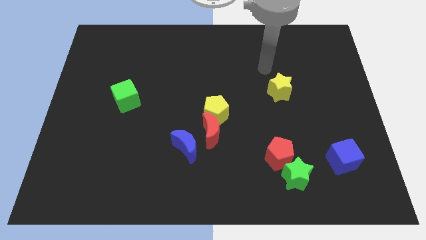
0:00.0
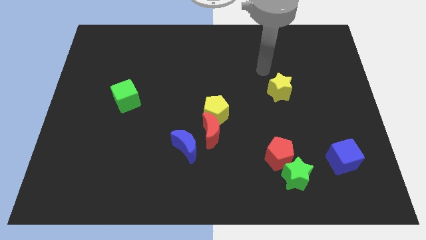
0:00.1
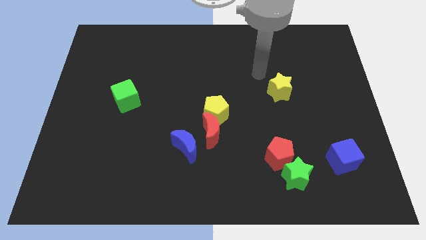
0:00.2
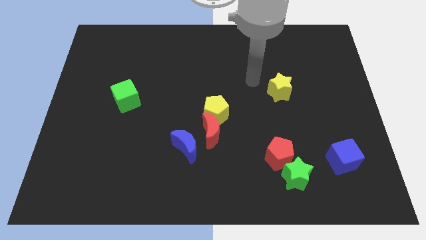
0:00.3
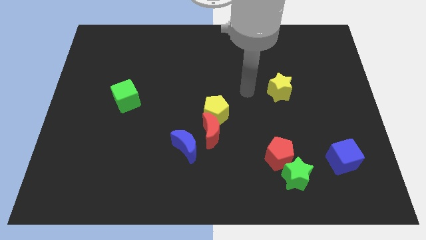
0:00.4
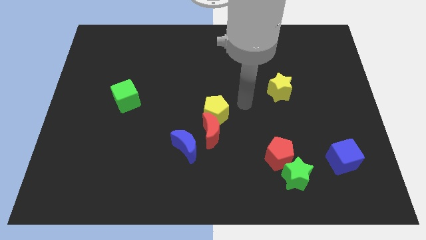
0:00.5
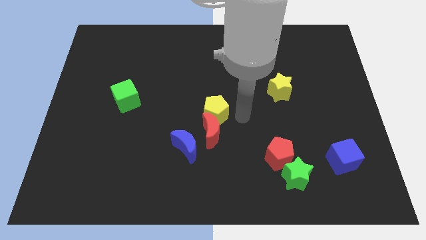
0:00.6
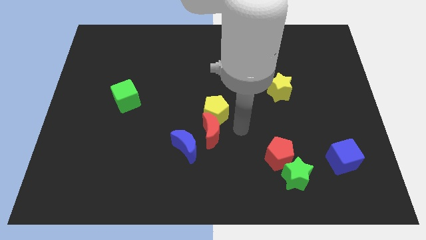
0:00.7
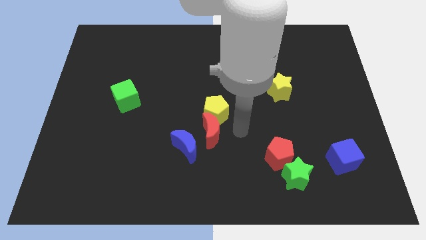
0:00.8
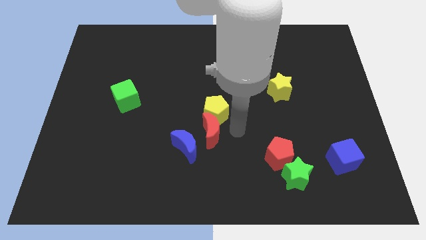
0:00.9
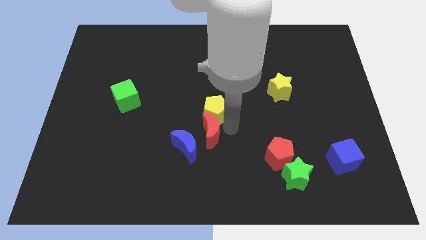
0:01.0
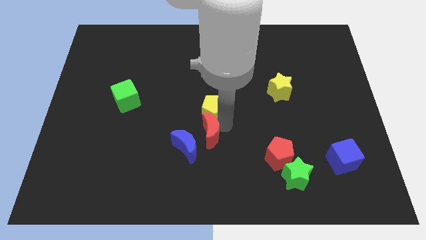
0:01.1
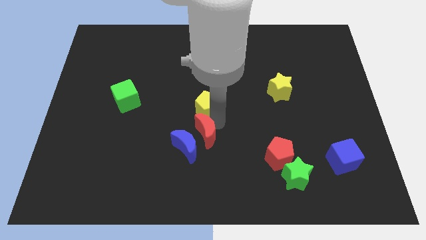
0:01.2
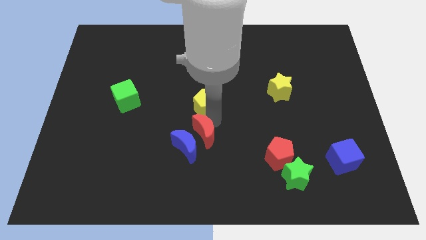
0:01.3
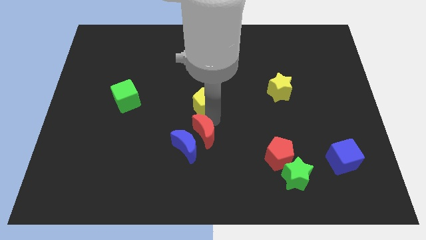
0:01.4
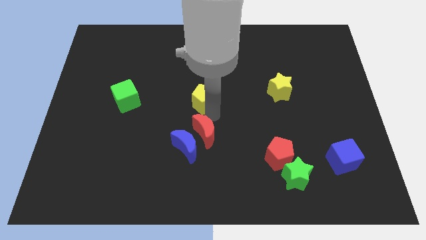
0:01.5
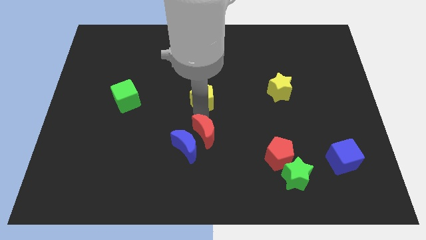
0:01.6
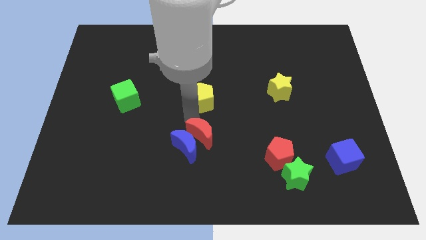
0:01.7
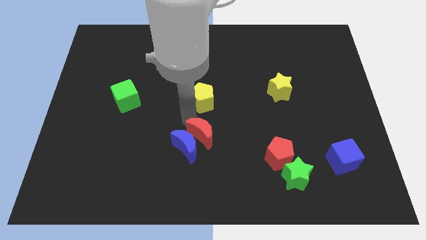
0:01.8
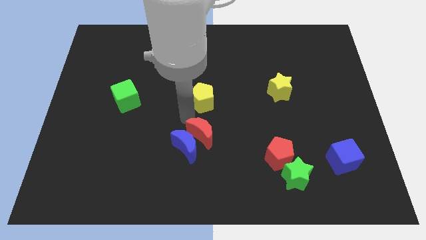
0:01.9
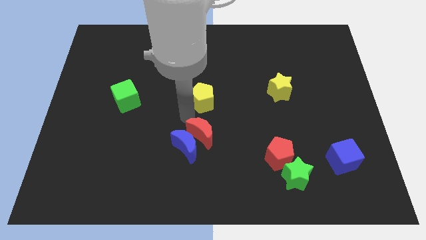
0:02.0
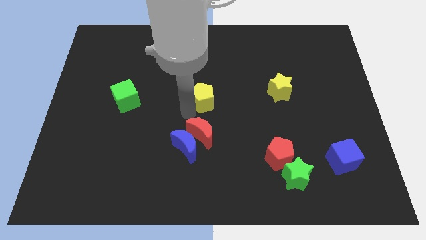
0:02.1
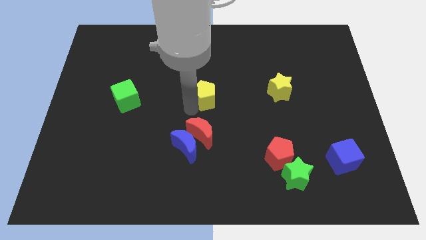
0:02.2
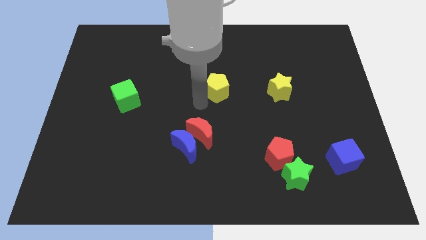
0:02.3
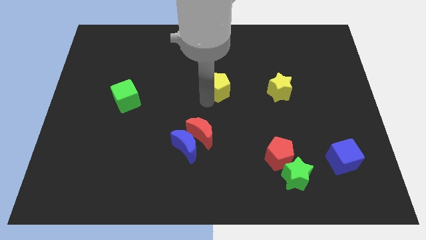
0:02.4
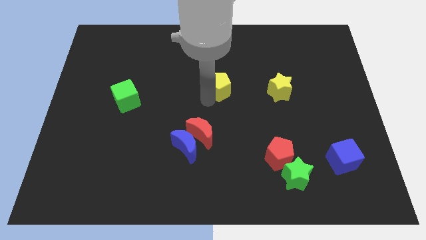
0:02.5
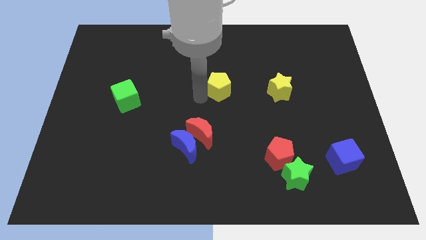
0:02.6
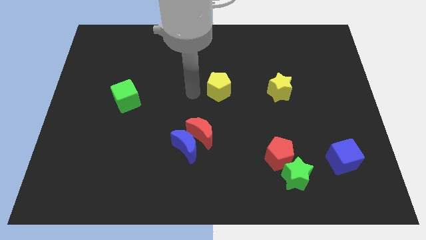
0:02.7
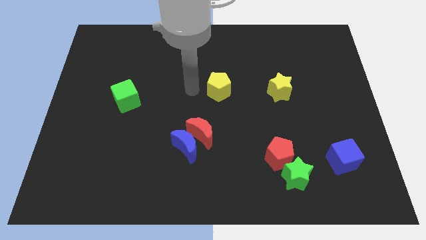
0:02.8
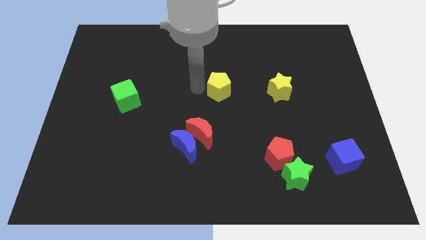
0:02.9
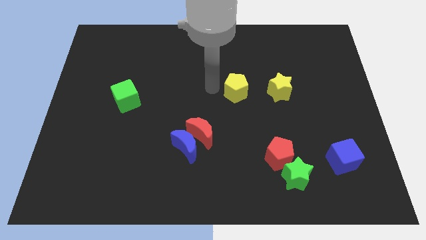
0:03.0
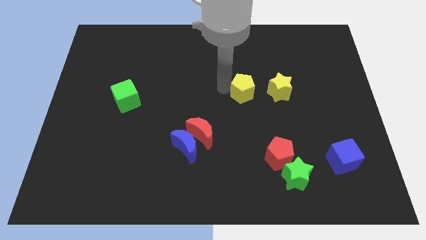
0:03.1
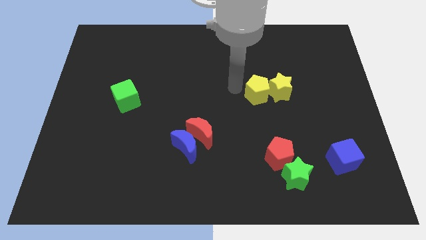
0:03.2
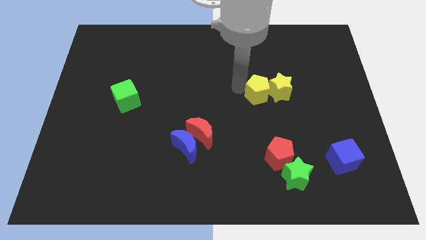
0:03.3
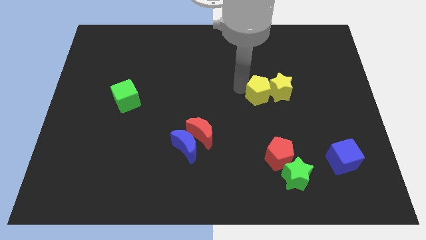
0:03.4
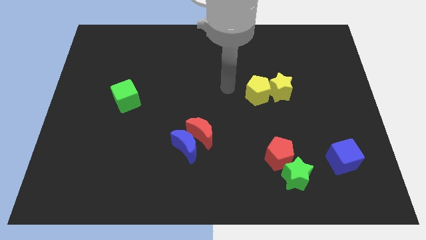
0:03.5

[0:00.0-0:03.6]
place the yellow pentagon left to the yellow star

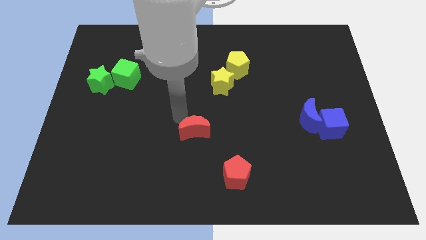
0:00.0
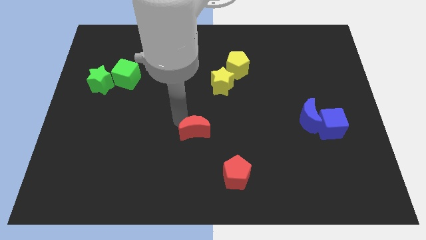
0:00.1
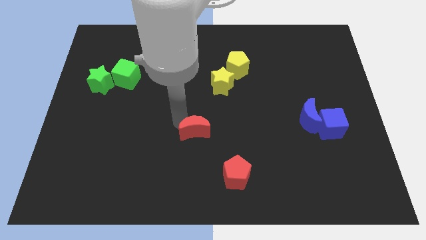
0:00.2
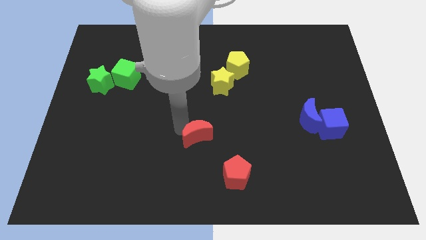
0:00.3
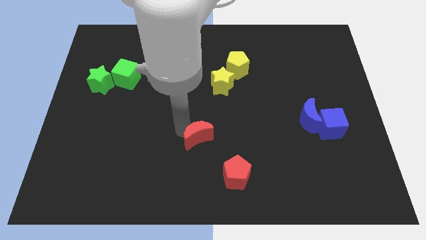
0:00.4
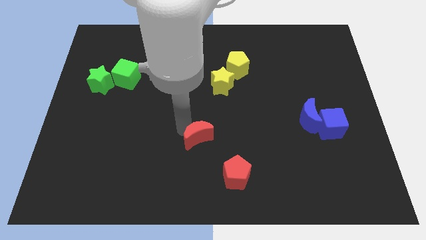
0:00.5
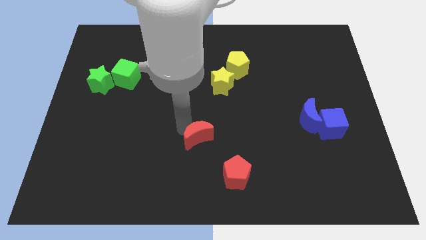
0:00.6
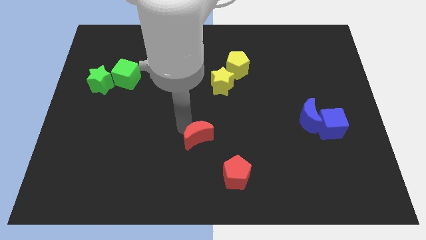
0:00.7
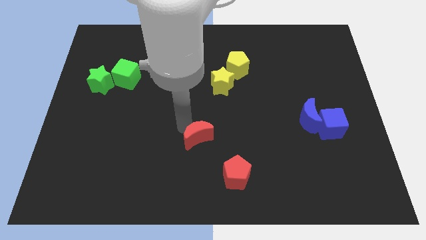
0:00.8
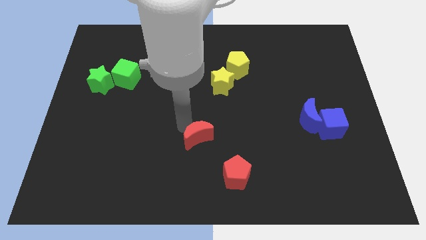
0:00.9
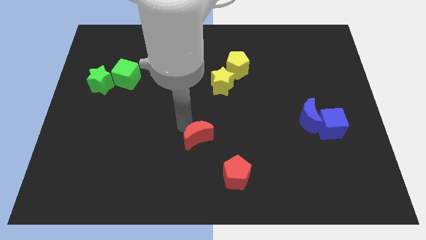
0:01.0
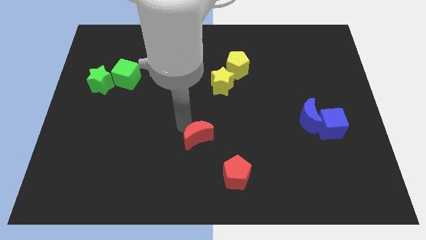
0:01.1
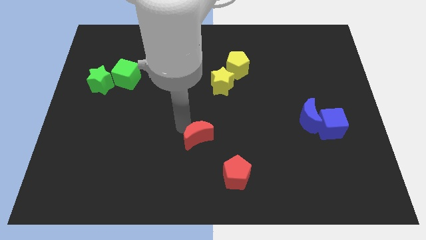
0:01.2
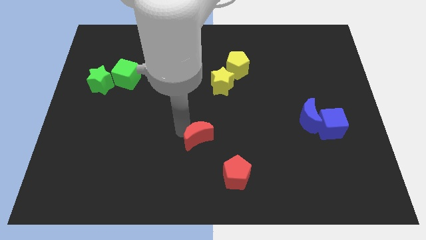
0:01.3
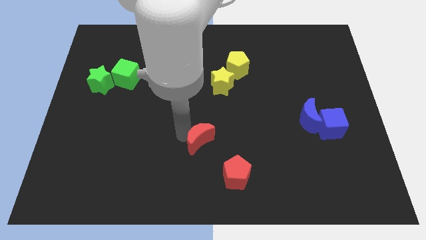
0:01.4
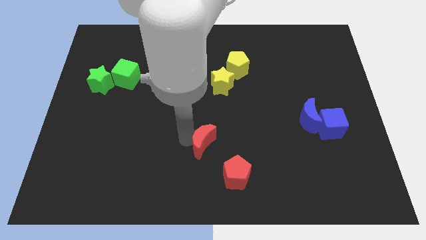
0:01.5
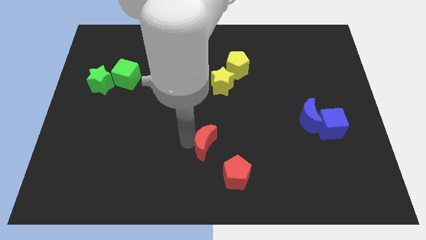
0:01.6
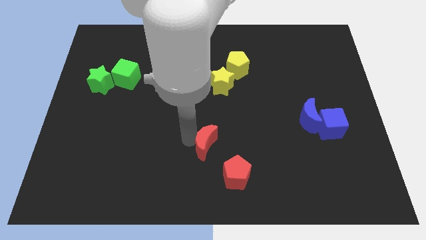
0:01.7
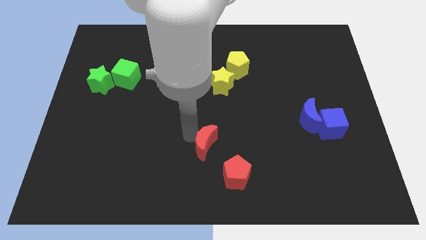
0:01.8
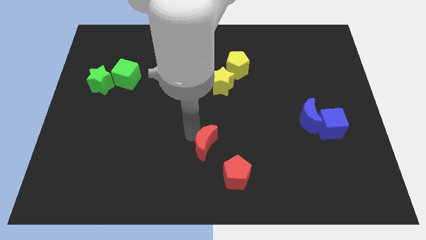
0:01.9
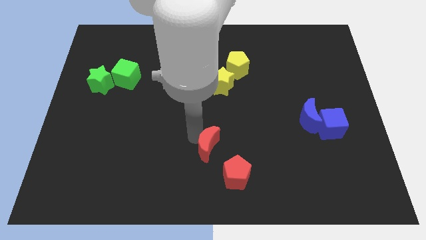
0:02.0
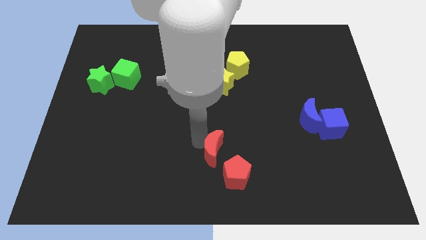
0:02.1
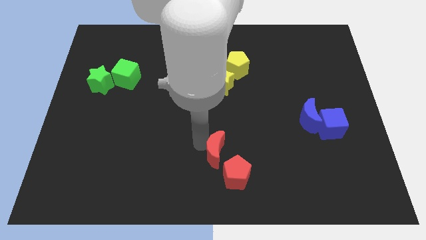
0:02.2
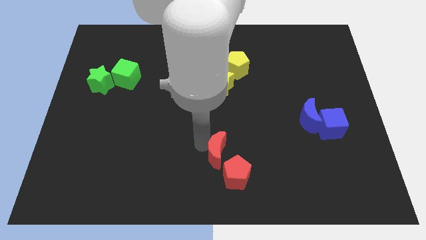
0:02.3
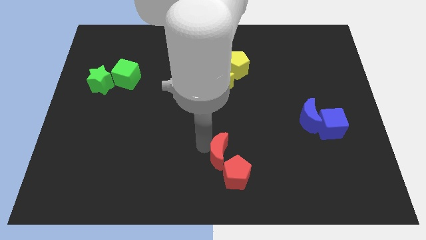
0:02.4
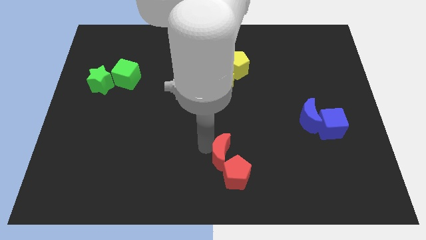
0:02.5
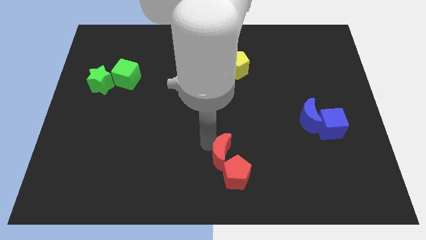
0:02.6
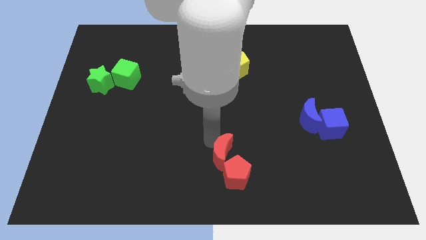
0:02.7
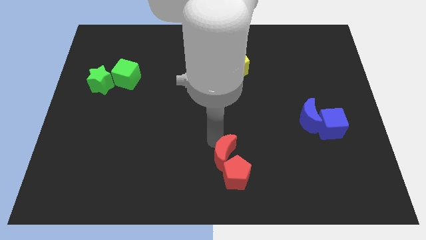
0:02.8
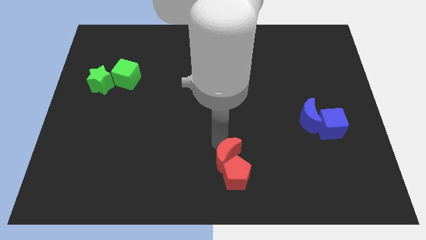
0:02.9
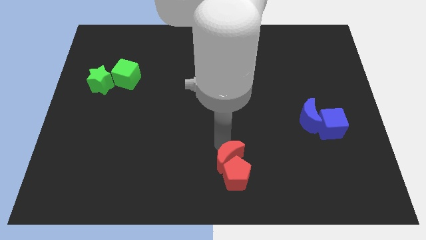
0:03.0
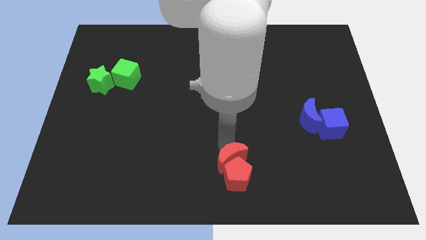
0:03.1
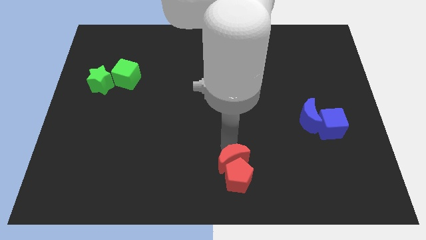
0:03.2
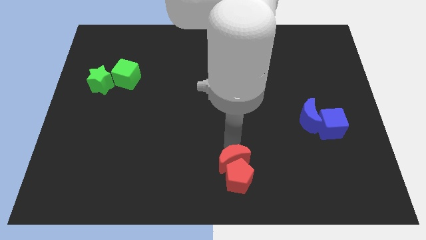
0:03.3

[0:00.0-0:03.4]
move the red crescent into the red pentagon

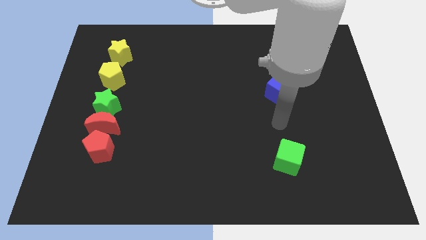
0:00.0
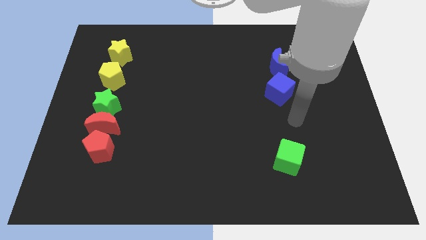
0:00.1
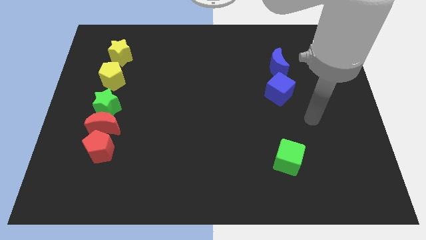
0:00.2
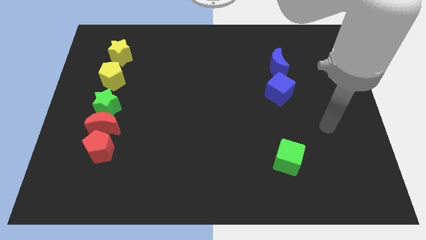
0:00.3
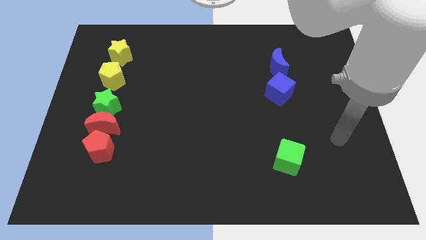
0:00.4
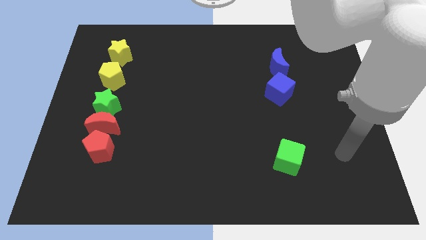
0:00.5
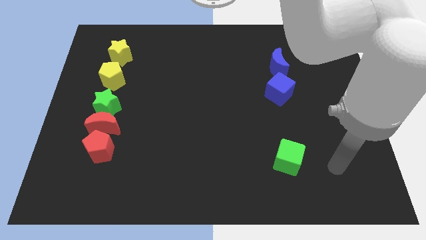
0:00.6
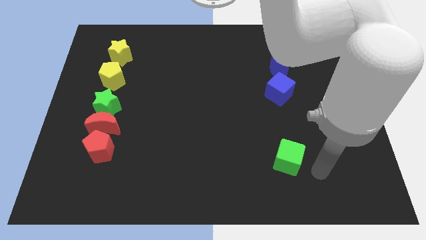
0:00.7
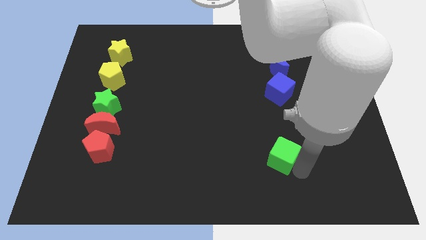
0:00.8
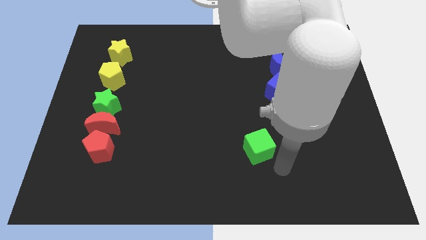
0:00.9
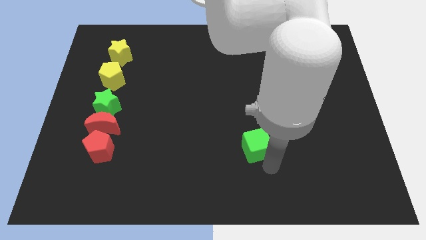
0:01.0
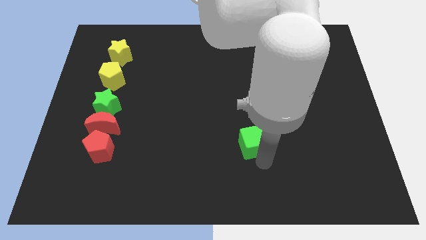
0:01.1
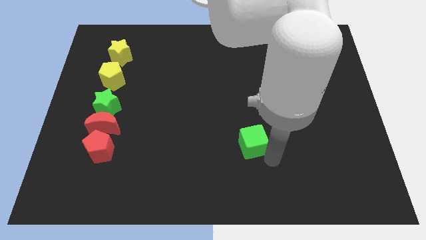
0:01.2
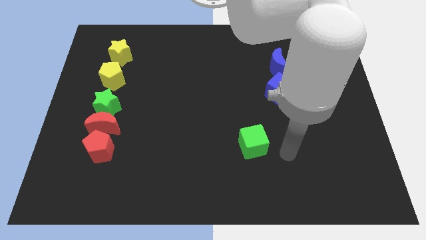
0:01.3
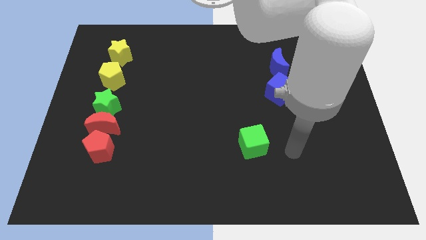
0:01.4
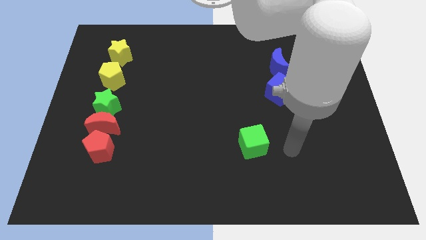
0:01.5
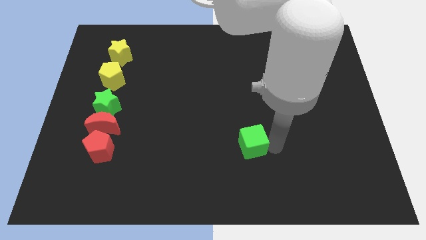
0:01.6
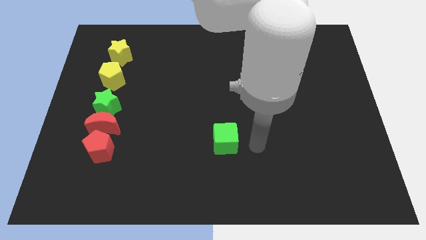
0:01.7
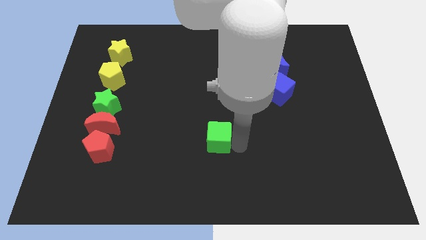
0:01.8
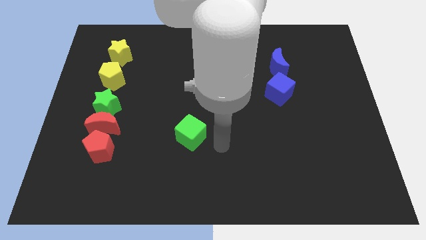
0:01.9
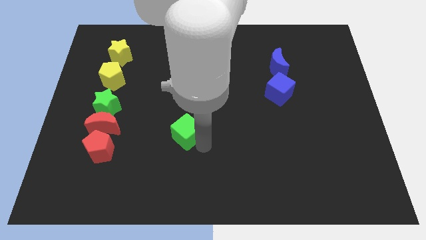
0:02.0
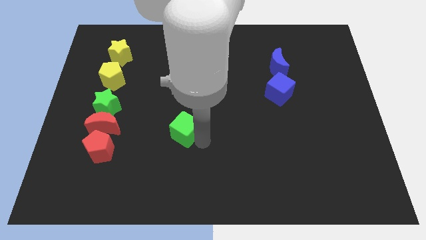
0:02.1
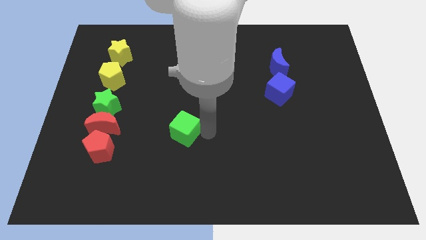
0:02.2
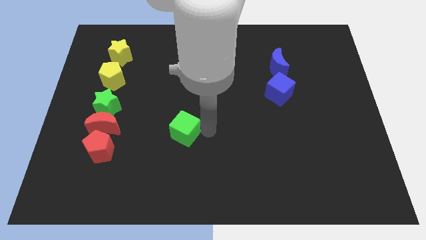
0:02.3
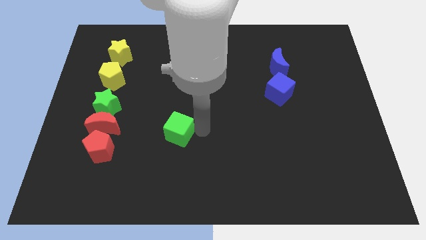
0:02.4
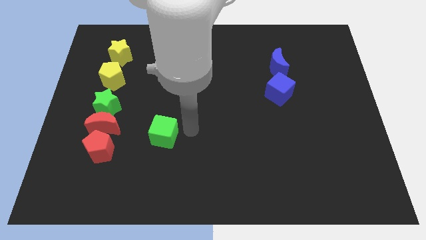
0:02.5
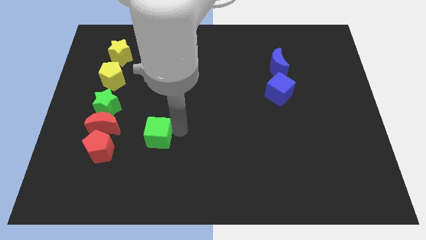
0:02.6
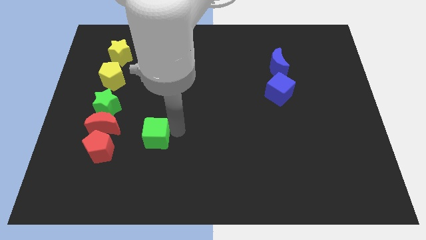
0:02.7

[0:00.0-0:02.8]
place the green cube right to the red moon
